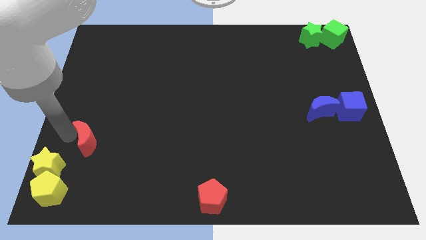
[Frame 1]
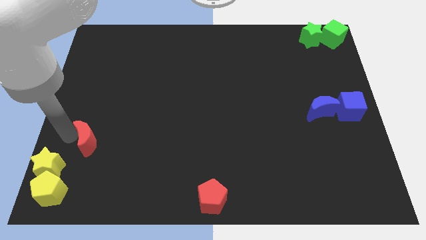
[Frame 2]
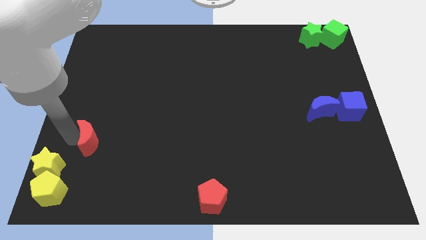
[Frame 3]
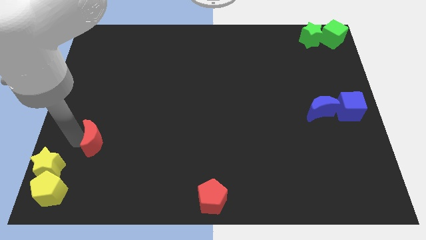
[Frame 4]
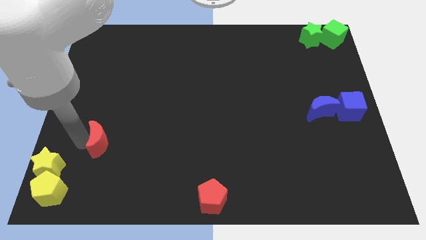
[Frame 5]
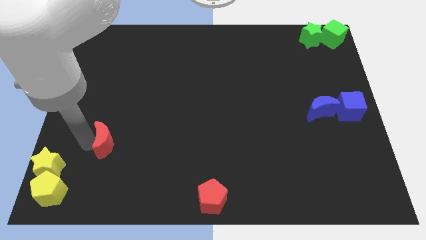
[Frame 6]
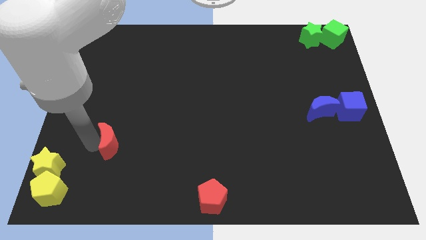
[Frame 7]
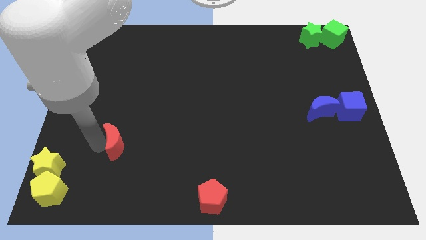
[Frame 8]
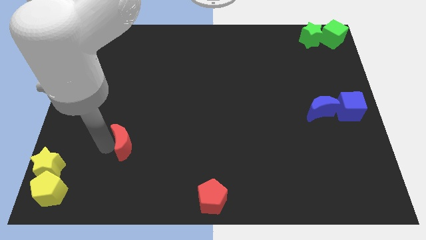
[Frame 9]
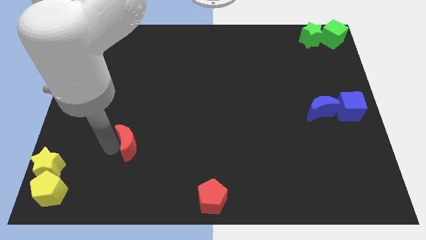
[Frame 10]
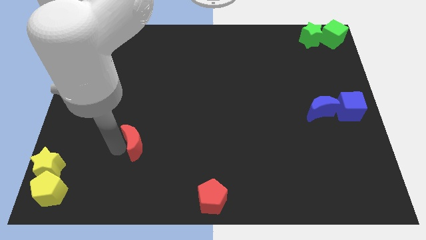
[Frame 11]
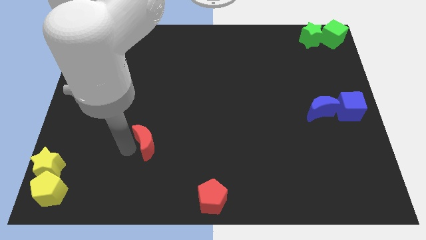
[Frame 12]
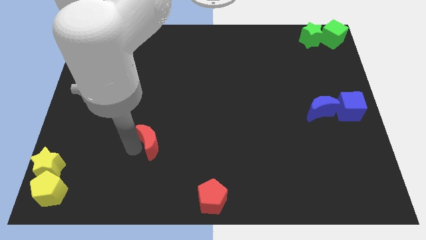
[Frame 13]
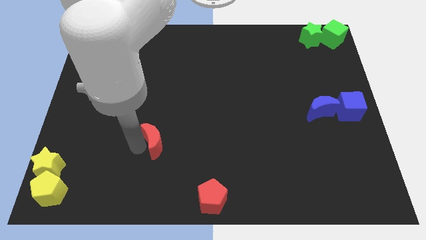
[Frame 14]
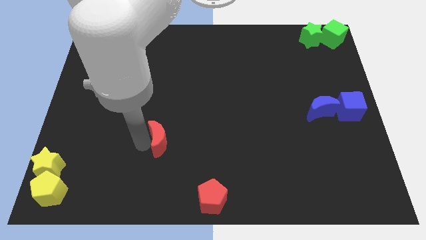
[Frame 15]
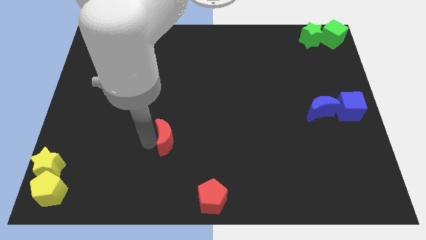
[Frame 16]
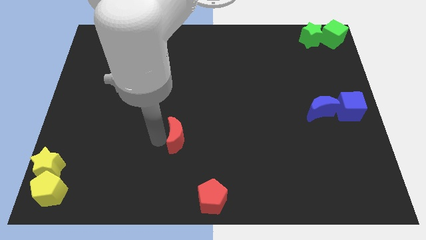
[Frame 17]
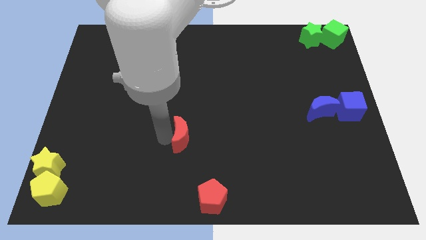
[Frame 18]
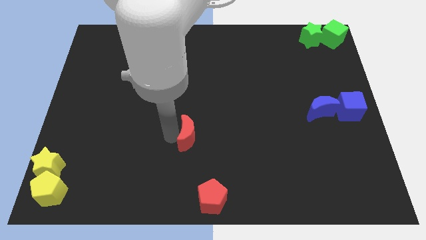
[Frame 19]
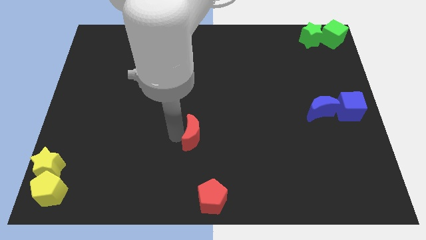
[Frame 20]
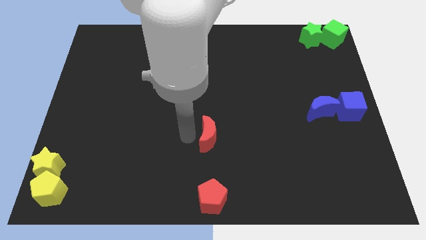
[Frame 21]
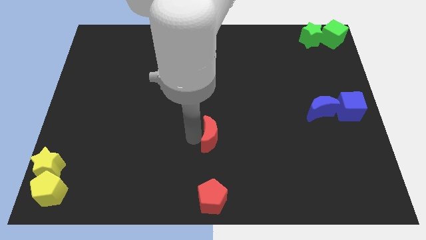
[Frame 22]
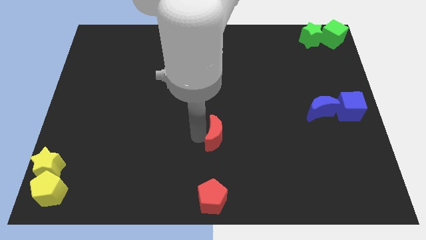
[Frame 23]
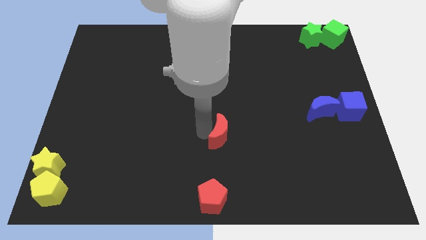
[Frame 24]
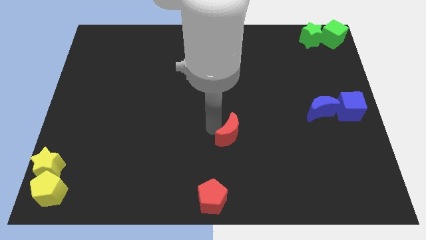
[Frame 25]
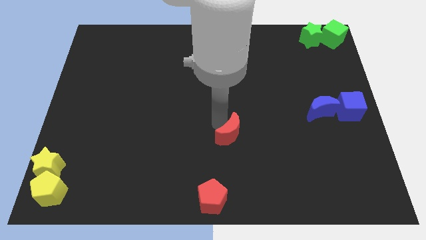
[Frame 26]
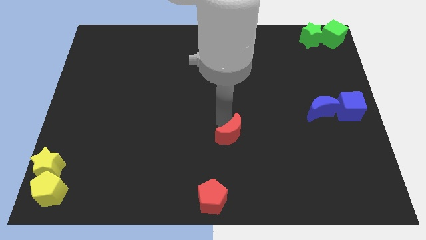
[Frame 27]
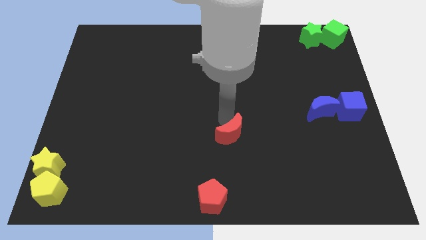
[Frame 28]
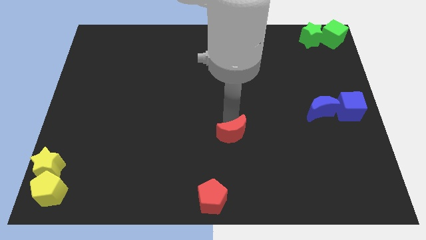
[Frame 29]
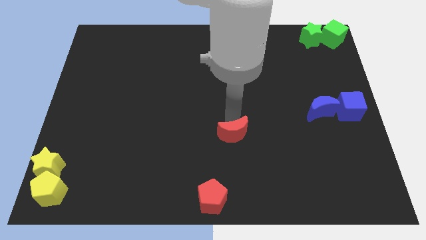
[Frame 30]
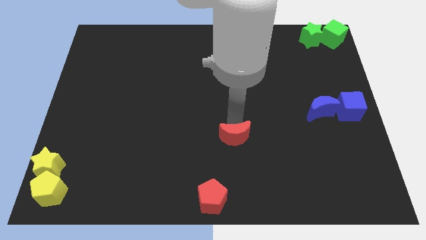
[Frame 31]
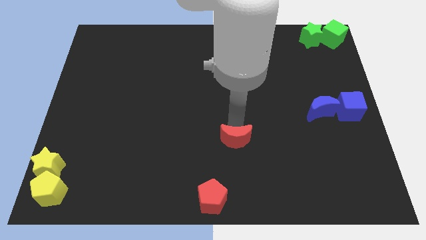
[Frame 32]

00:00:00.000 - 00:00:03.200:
push the red crescent to the center of the board

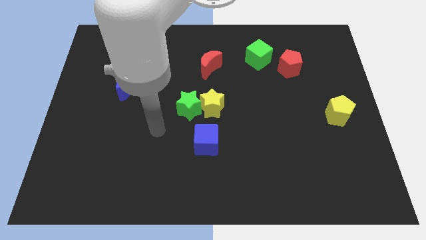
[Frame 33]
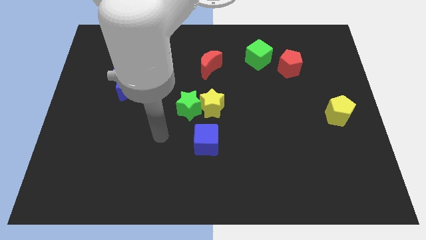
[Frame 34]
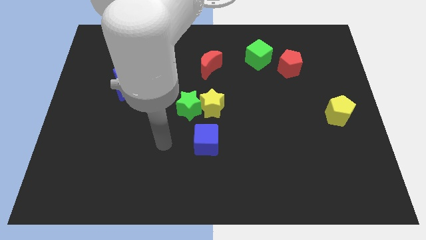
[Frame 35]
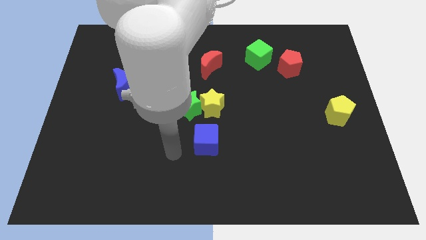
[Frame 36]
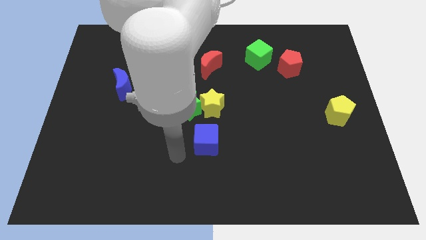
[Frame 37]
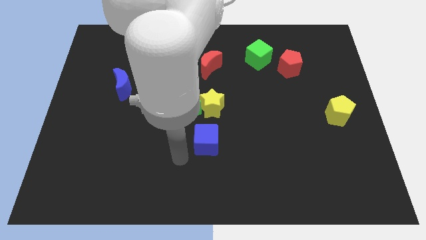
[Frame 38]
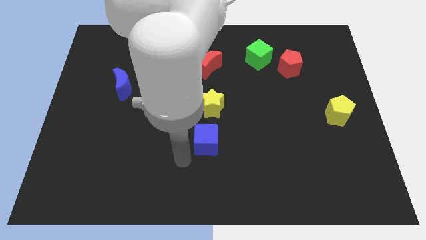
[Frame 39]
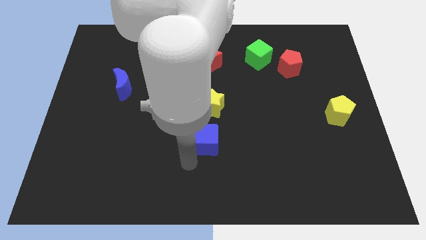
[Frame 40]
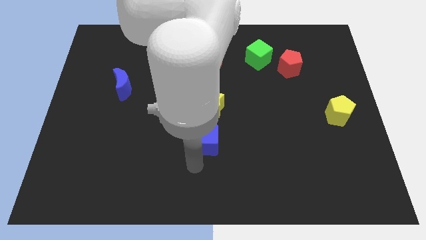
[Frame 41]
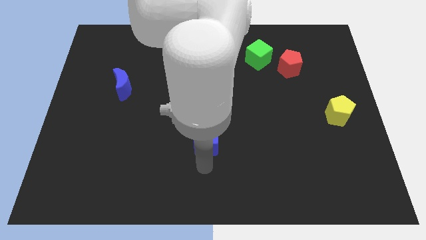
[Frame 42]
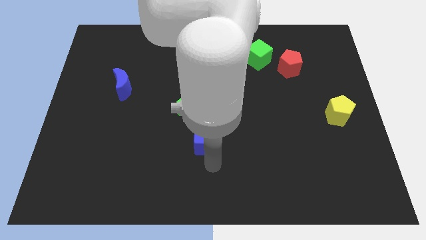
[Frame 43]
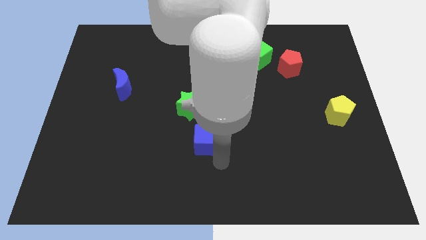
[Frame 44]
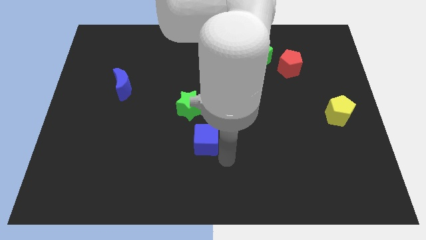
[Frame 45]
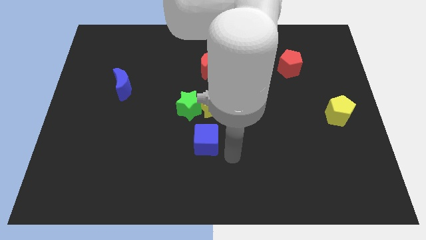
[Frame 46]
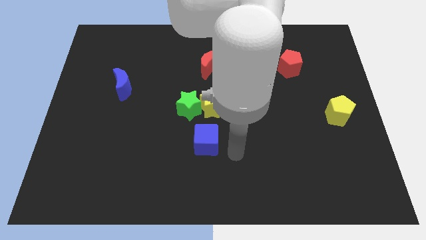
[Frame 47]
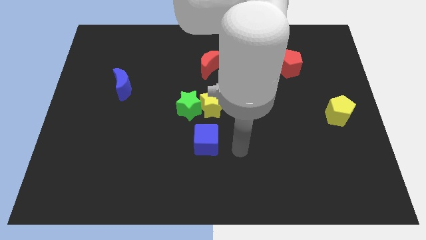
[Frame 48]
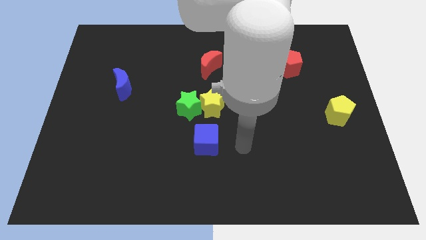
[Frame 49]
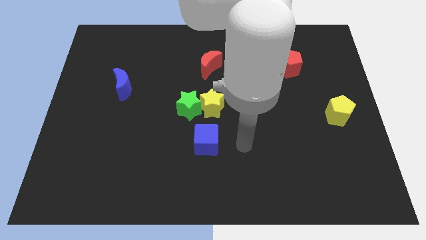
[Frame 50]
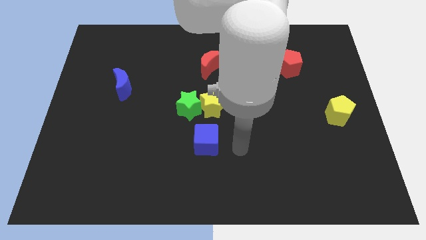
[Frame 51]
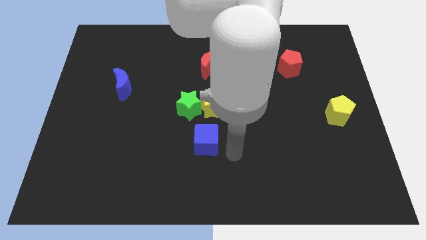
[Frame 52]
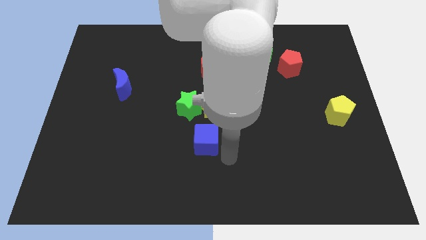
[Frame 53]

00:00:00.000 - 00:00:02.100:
move your arm to the bottom right of the blue cube

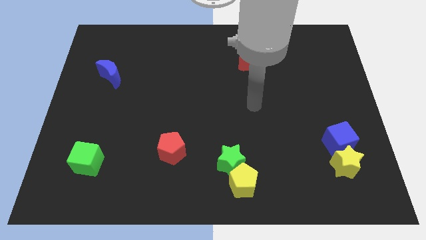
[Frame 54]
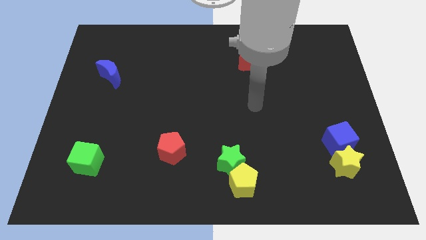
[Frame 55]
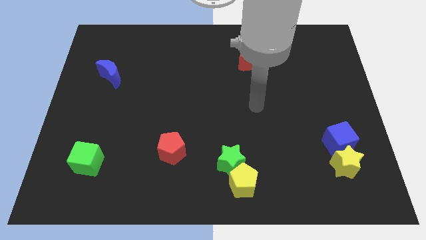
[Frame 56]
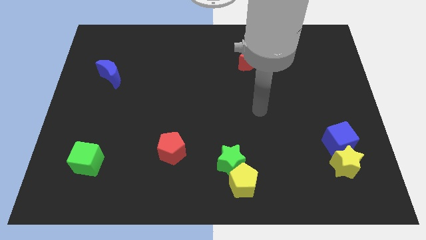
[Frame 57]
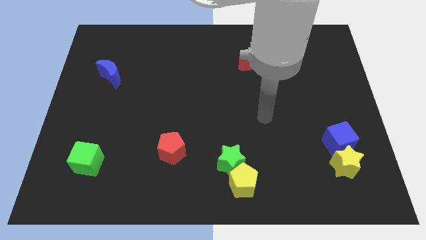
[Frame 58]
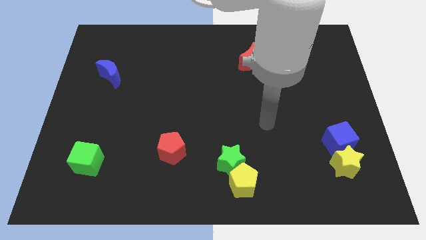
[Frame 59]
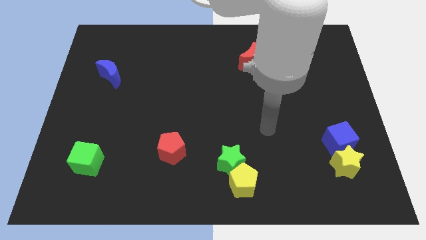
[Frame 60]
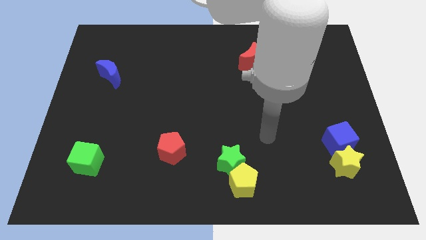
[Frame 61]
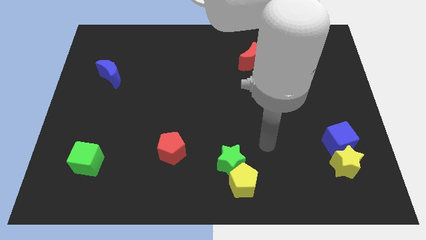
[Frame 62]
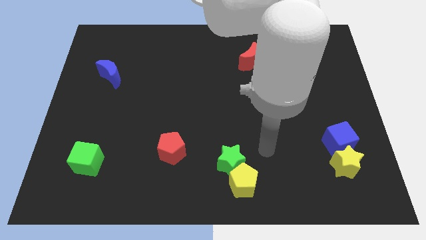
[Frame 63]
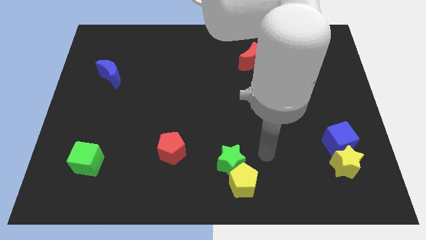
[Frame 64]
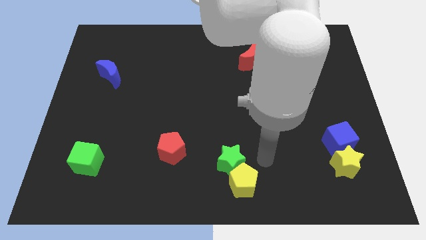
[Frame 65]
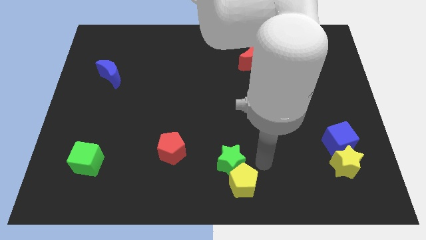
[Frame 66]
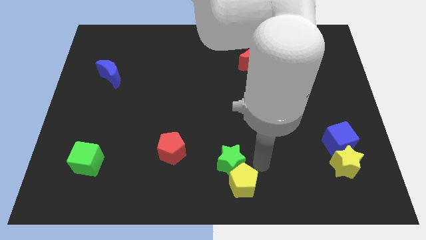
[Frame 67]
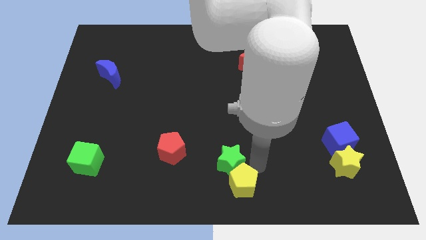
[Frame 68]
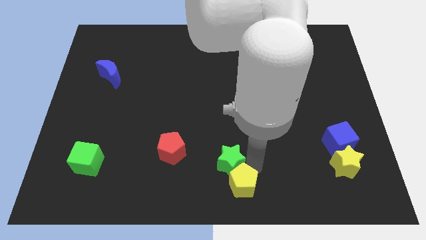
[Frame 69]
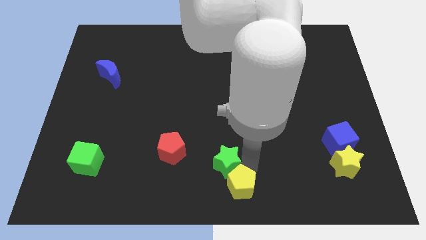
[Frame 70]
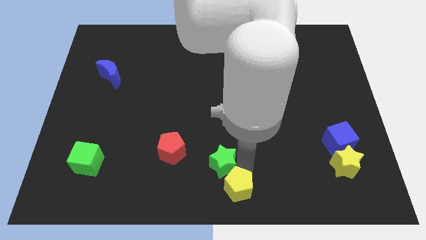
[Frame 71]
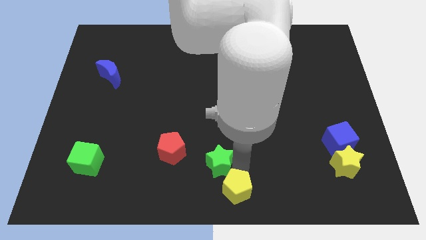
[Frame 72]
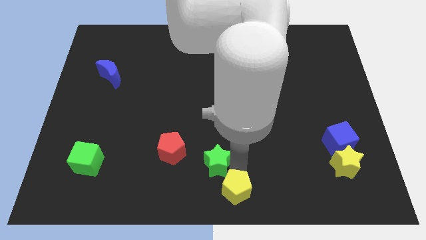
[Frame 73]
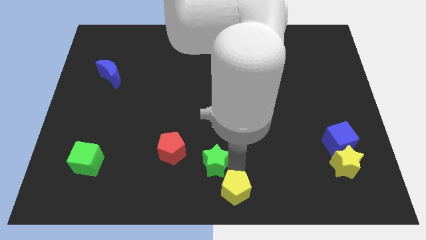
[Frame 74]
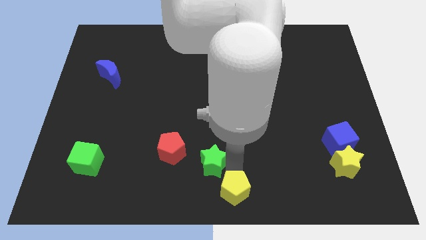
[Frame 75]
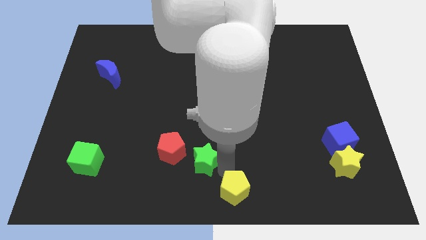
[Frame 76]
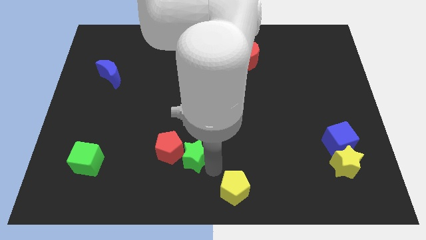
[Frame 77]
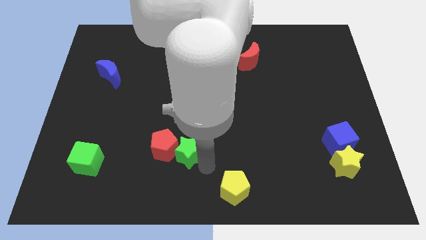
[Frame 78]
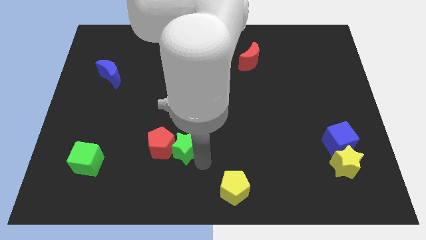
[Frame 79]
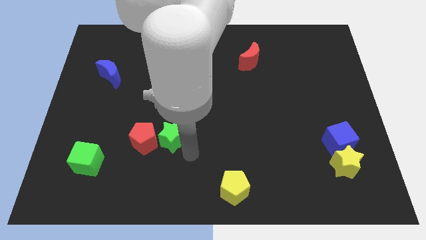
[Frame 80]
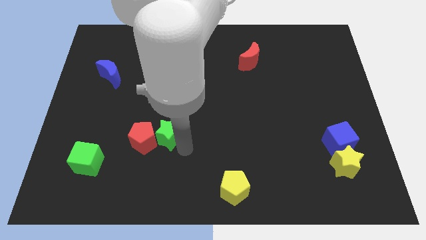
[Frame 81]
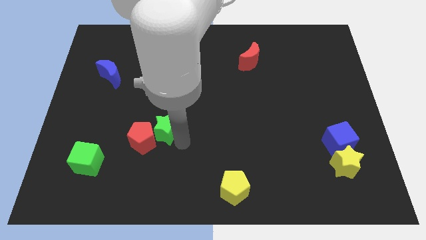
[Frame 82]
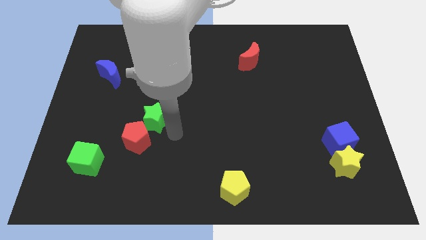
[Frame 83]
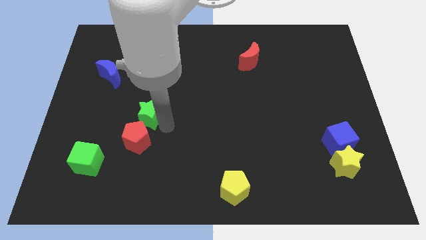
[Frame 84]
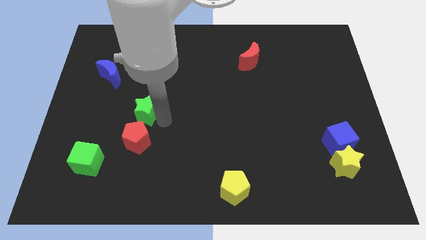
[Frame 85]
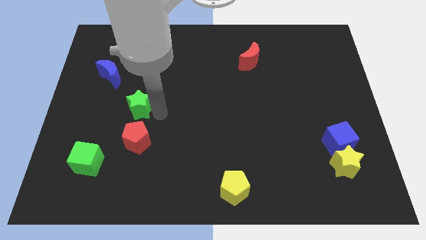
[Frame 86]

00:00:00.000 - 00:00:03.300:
push the green star to the top of the red pentagon

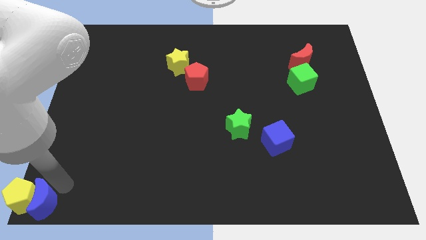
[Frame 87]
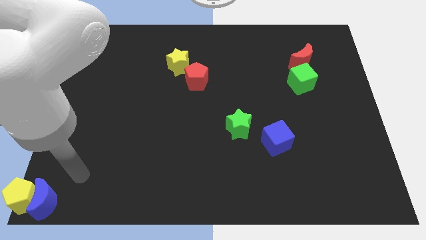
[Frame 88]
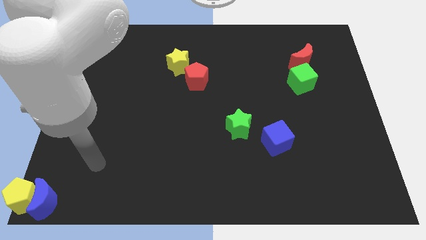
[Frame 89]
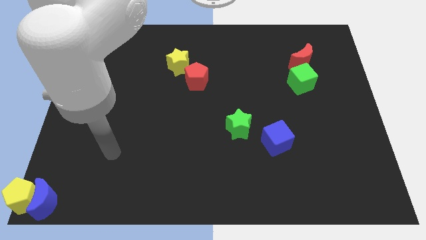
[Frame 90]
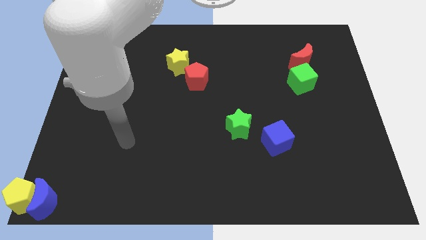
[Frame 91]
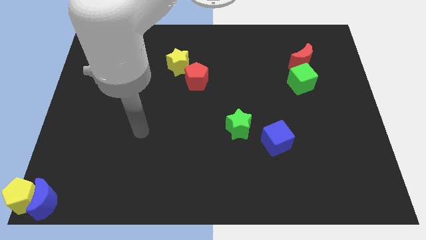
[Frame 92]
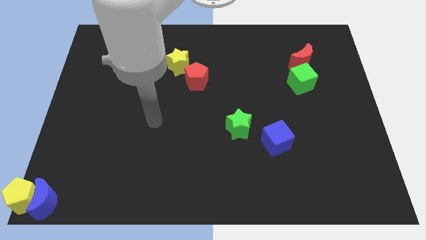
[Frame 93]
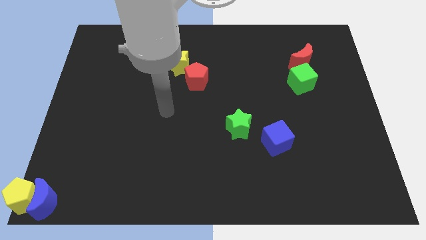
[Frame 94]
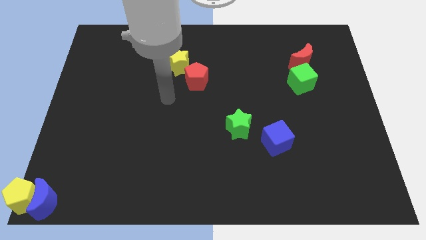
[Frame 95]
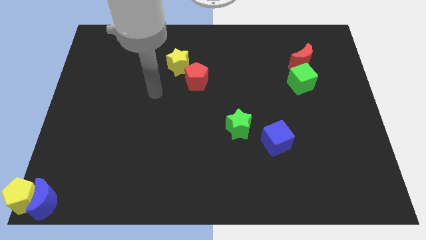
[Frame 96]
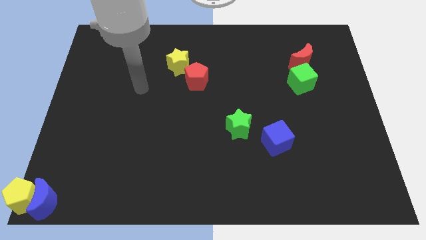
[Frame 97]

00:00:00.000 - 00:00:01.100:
move your arm towards the yellow star
